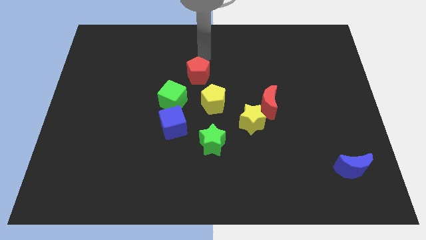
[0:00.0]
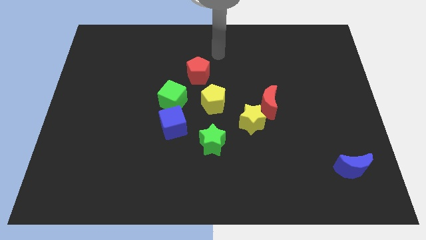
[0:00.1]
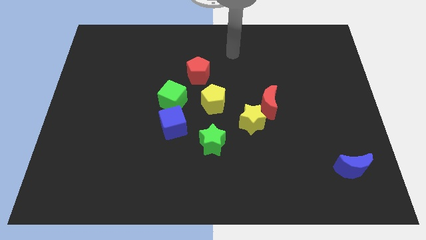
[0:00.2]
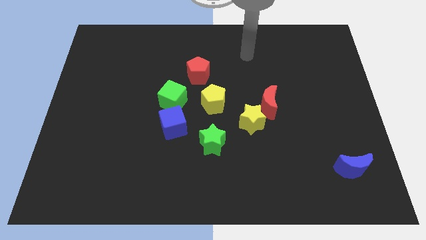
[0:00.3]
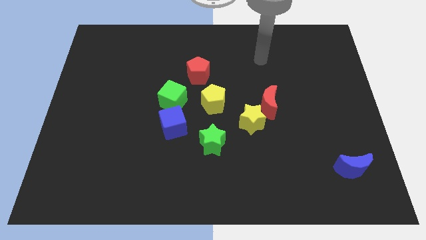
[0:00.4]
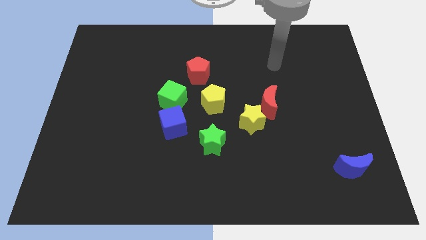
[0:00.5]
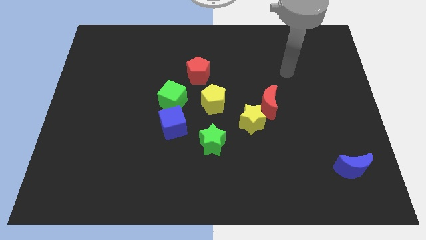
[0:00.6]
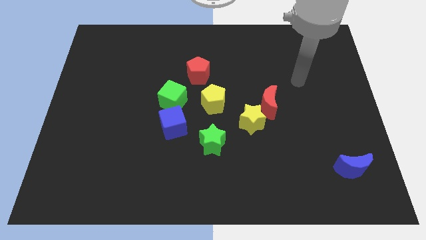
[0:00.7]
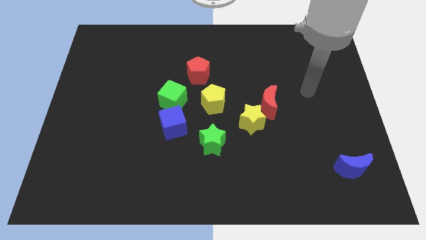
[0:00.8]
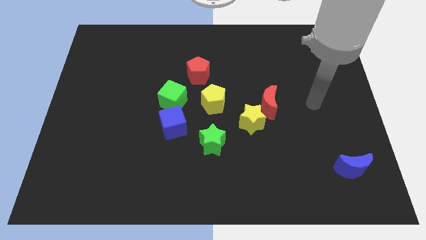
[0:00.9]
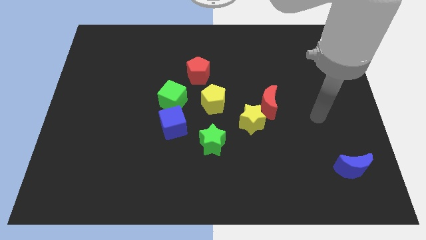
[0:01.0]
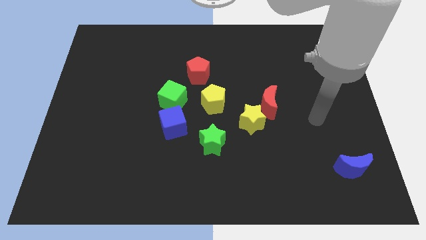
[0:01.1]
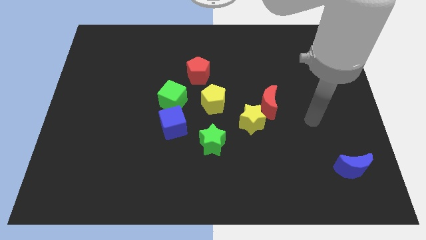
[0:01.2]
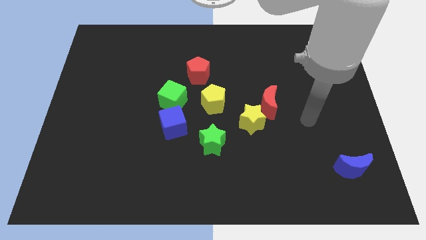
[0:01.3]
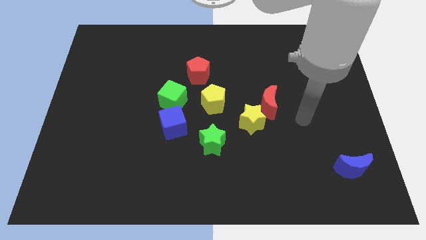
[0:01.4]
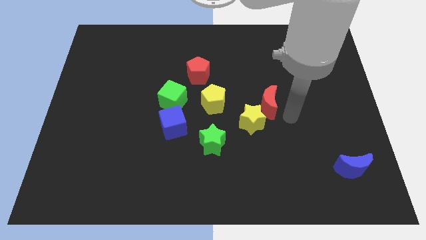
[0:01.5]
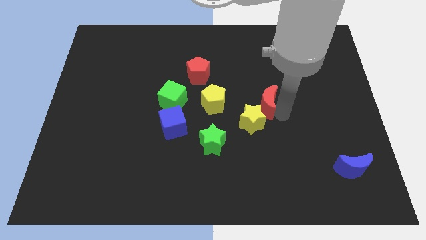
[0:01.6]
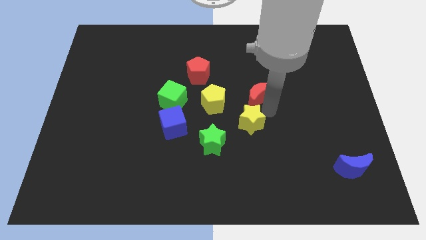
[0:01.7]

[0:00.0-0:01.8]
place the arm right to the red moon

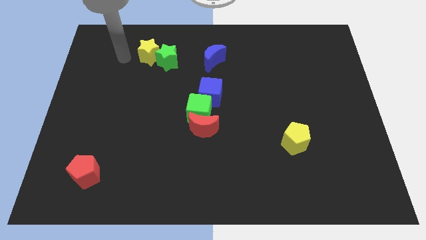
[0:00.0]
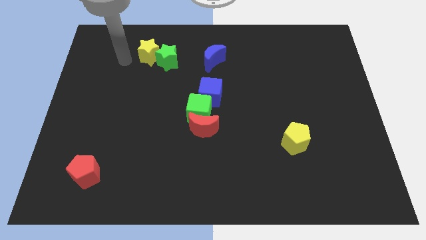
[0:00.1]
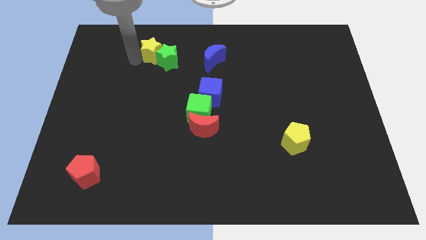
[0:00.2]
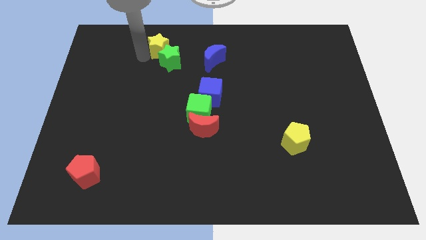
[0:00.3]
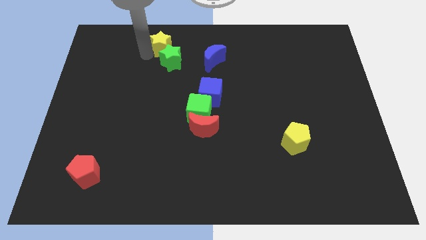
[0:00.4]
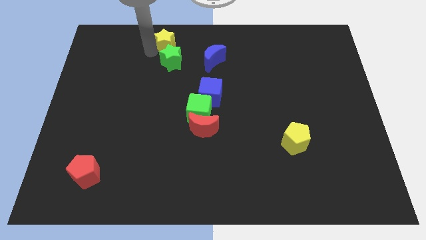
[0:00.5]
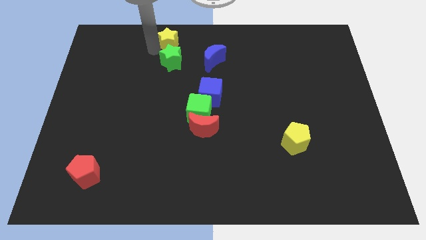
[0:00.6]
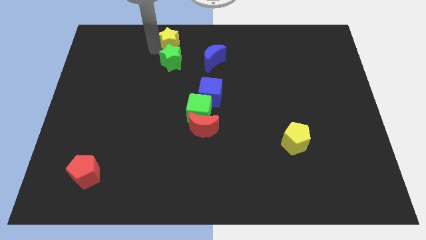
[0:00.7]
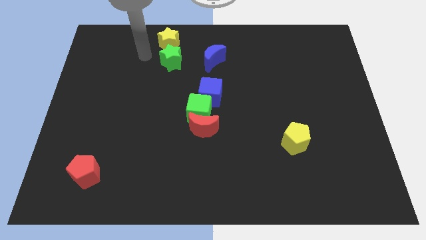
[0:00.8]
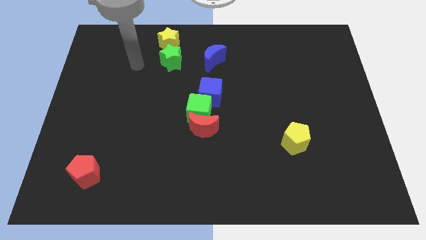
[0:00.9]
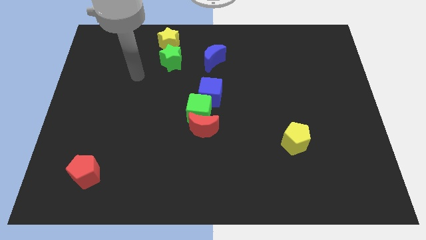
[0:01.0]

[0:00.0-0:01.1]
place the yellow star to the top of the green star

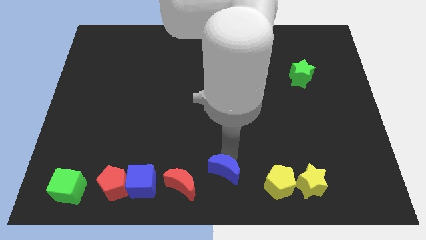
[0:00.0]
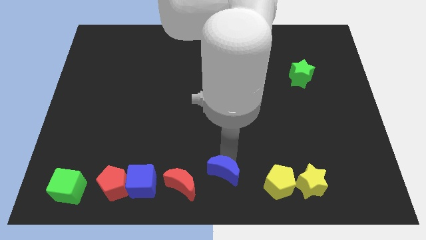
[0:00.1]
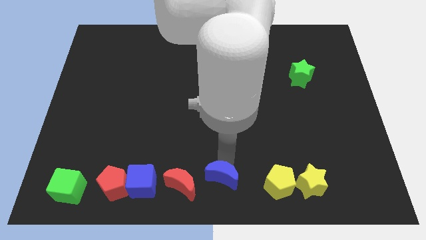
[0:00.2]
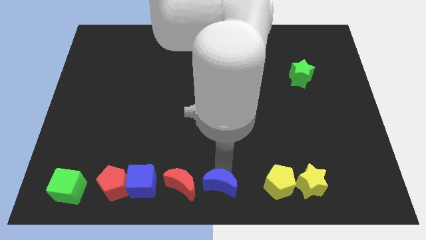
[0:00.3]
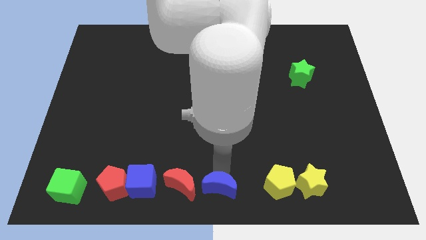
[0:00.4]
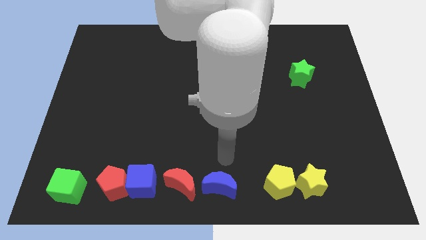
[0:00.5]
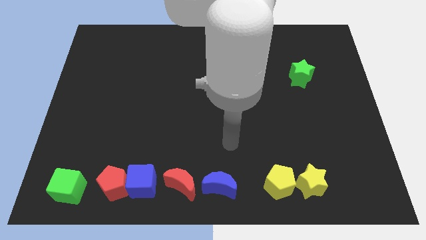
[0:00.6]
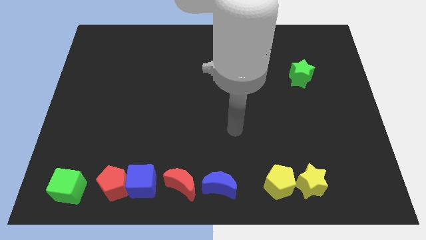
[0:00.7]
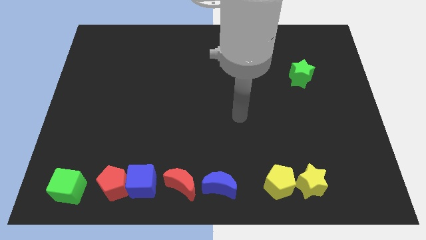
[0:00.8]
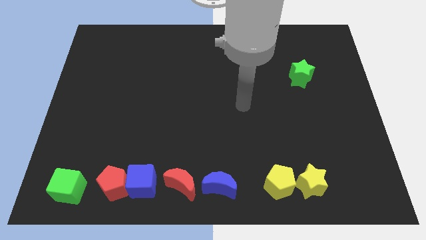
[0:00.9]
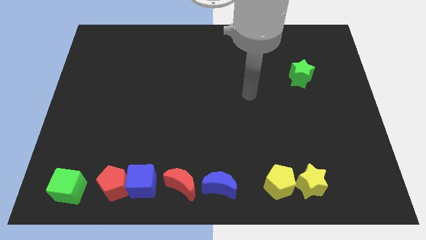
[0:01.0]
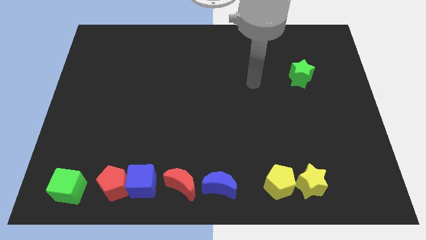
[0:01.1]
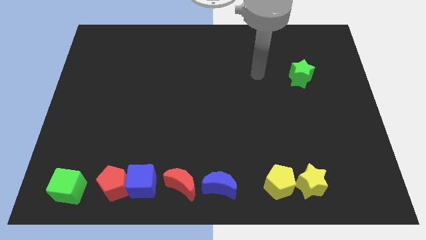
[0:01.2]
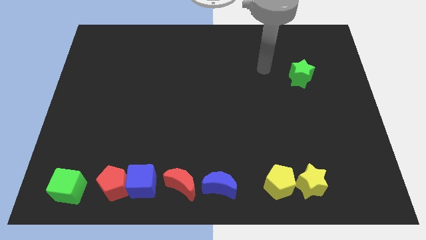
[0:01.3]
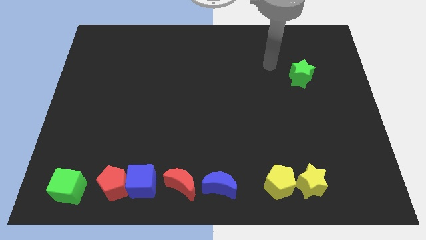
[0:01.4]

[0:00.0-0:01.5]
place the blue moon to the right side of the red moon

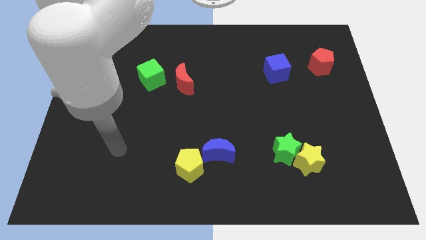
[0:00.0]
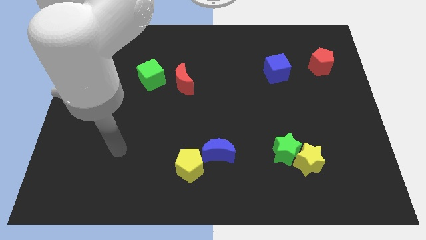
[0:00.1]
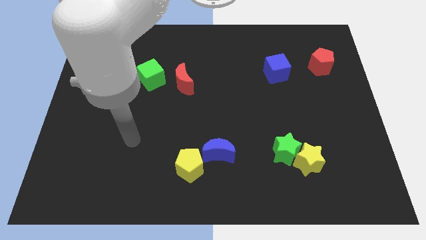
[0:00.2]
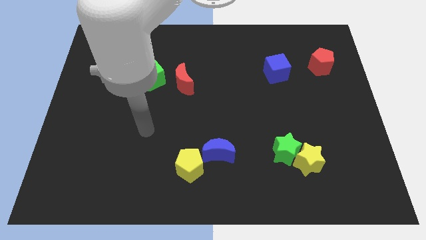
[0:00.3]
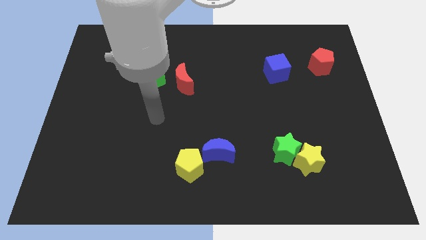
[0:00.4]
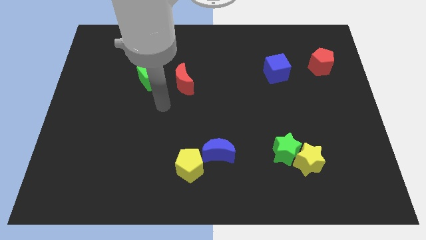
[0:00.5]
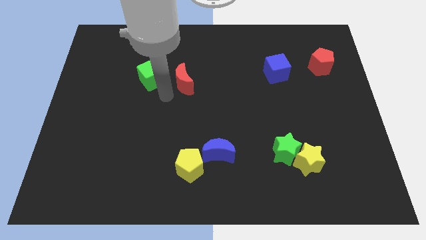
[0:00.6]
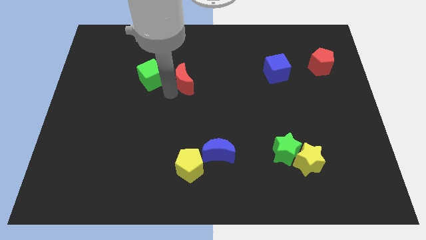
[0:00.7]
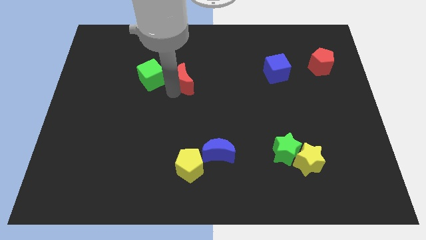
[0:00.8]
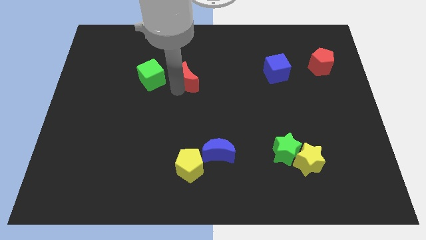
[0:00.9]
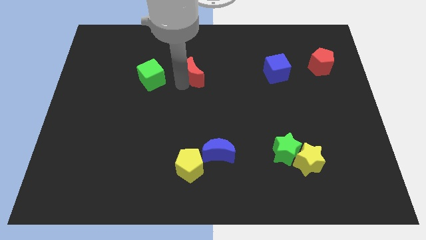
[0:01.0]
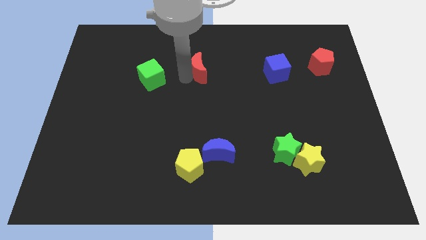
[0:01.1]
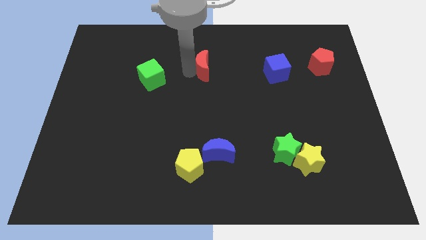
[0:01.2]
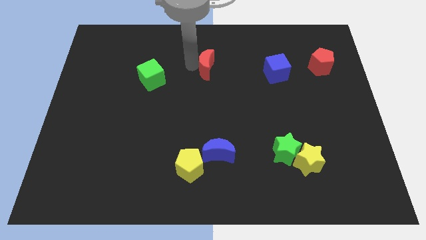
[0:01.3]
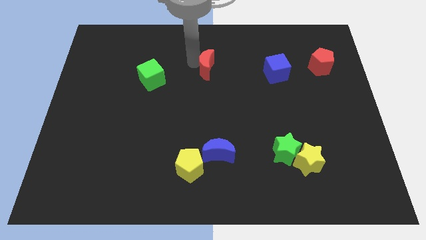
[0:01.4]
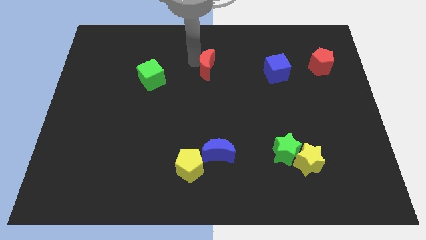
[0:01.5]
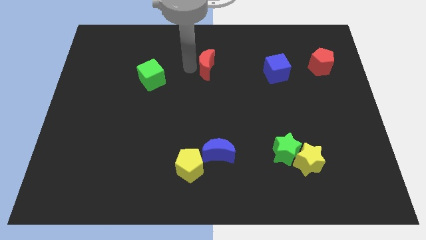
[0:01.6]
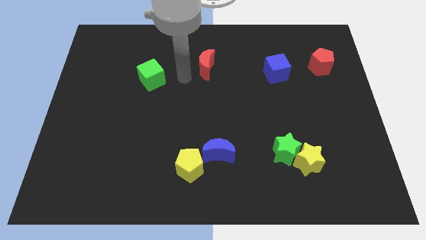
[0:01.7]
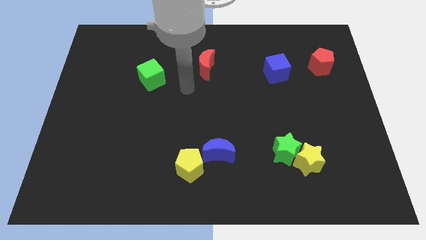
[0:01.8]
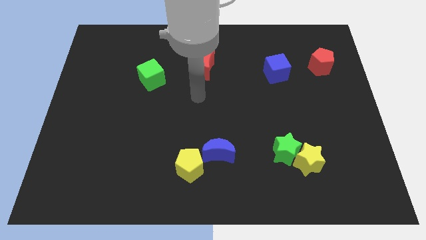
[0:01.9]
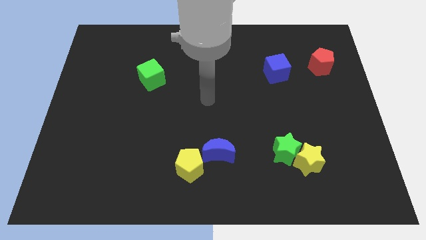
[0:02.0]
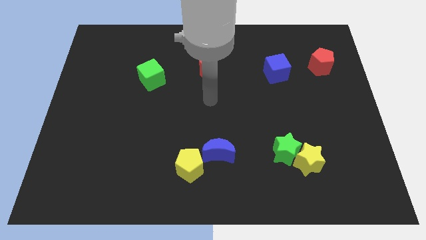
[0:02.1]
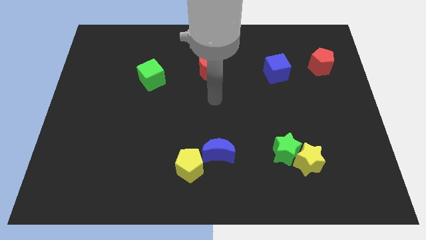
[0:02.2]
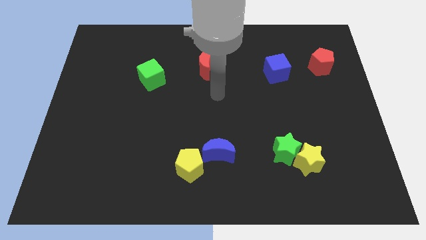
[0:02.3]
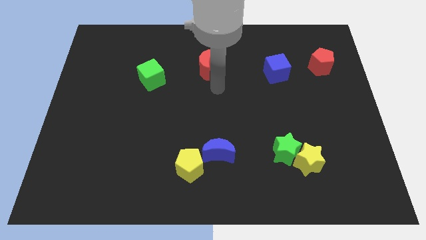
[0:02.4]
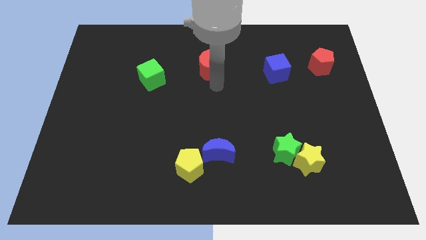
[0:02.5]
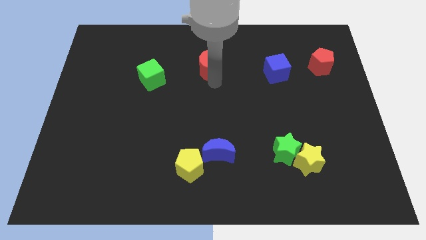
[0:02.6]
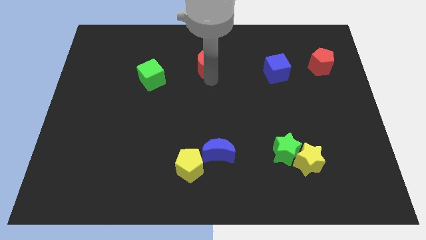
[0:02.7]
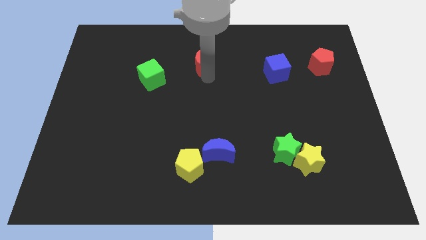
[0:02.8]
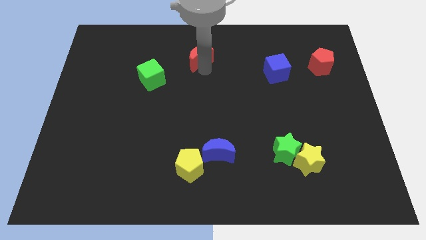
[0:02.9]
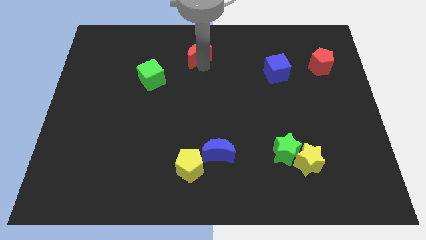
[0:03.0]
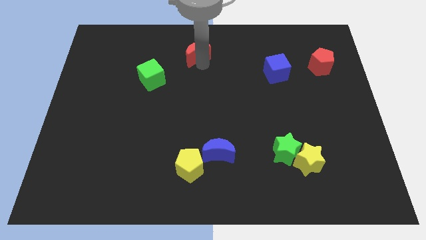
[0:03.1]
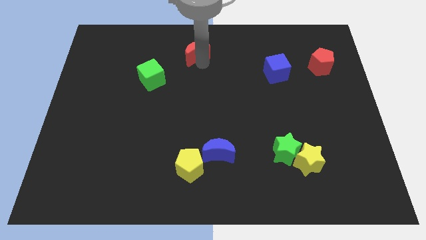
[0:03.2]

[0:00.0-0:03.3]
move the red moon diagonally top right to the green cube

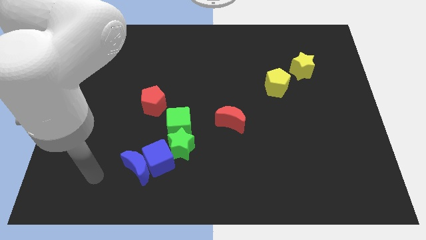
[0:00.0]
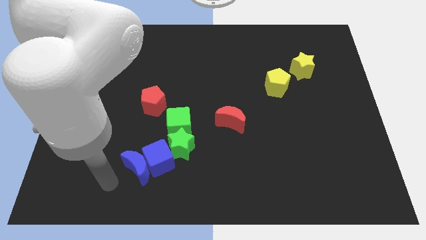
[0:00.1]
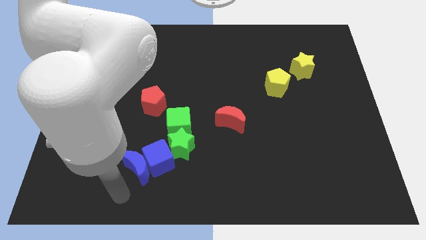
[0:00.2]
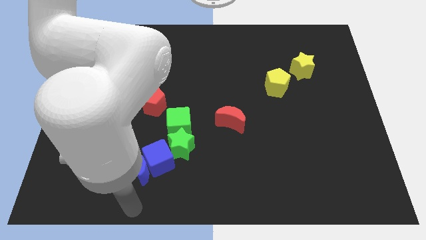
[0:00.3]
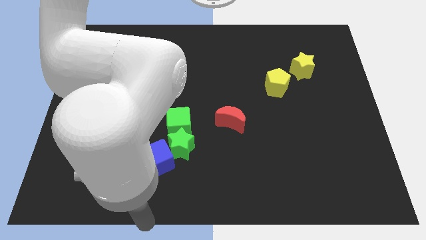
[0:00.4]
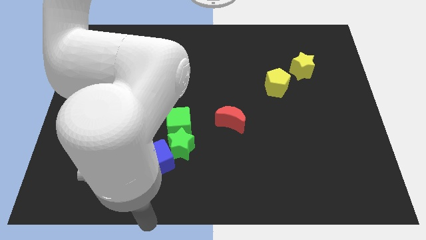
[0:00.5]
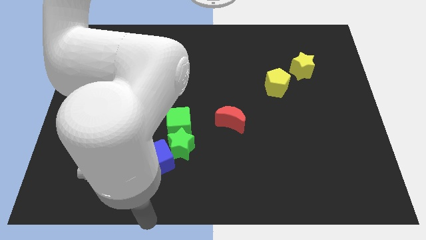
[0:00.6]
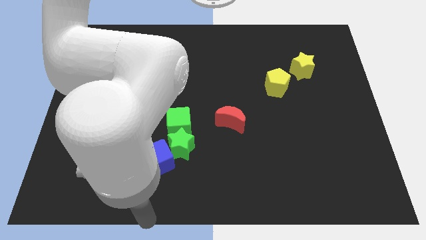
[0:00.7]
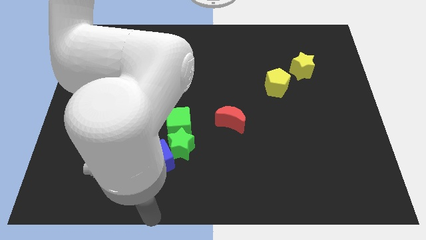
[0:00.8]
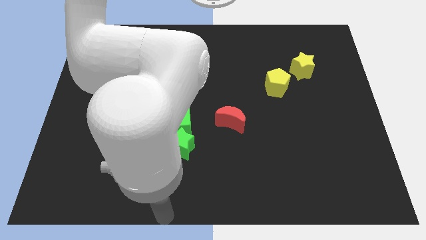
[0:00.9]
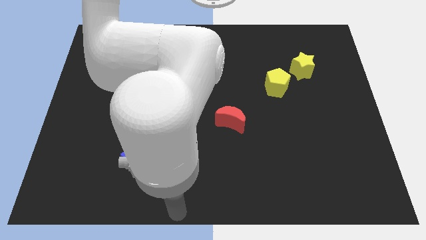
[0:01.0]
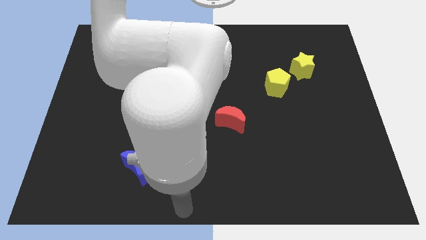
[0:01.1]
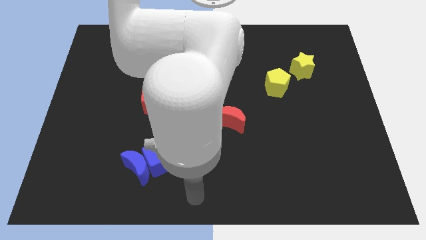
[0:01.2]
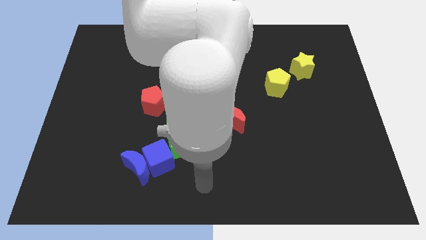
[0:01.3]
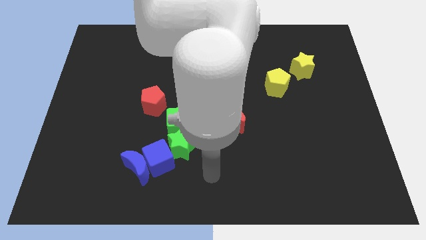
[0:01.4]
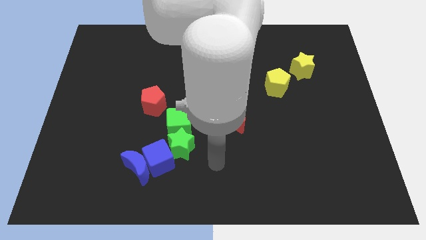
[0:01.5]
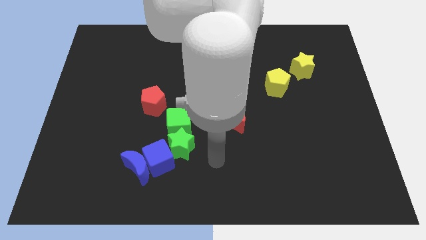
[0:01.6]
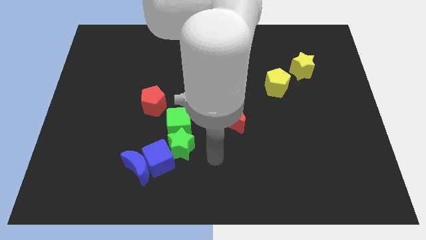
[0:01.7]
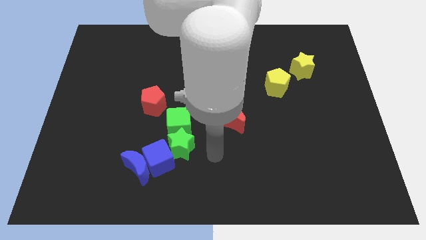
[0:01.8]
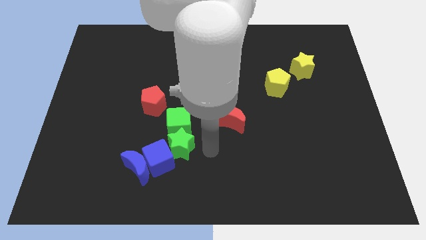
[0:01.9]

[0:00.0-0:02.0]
point your hand at the right side of the green star
